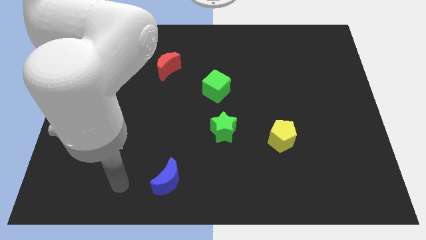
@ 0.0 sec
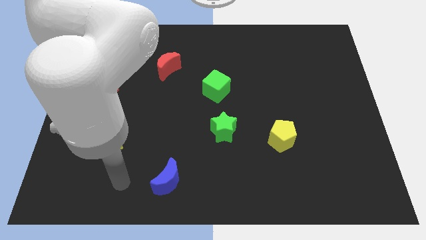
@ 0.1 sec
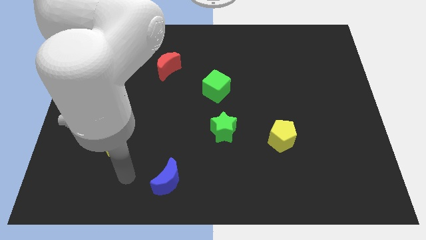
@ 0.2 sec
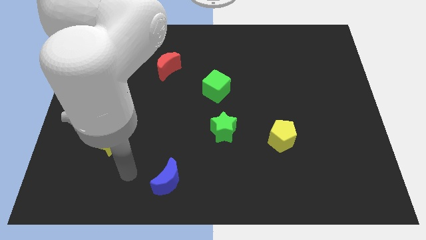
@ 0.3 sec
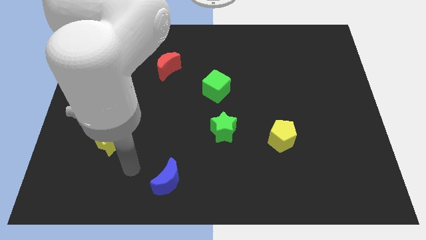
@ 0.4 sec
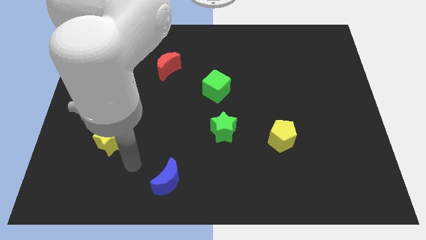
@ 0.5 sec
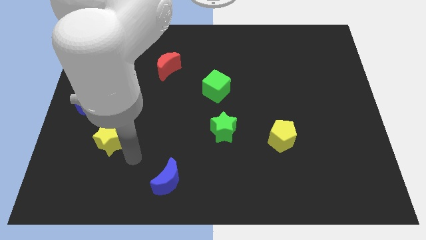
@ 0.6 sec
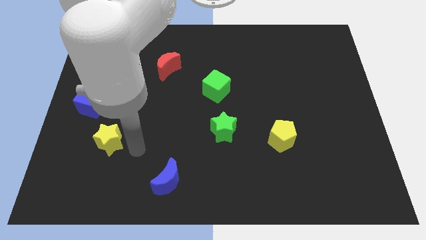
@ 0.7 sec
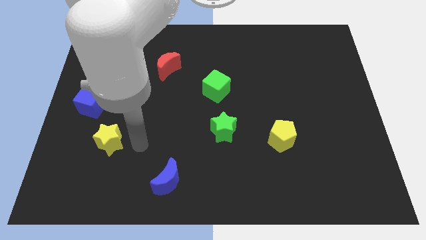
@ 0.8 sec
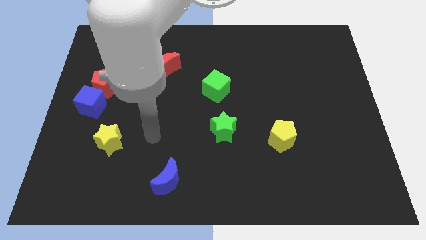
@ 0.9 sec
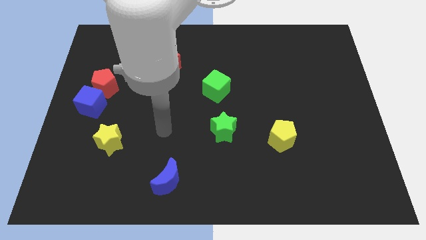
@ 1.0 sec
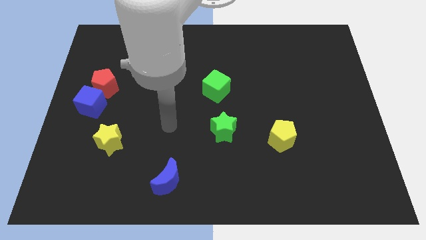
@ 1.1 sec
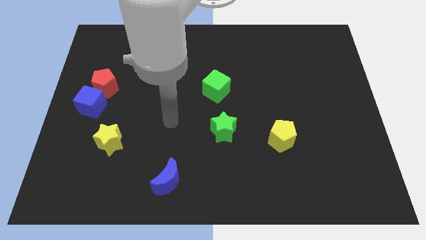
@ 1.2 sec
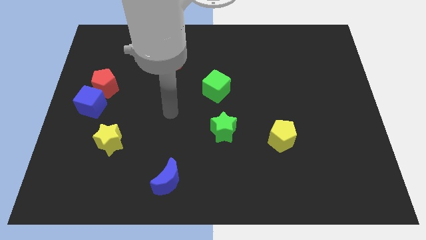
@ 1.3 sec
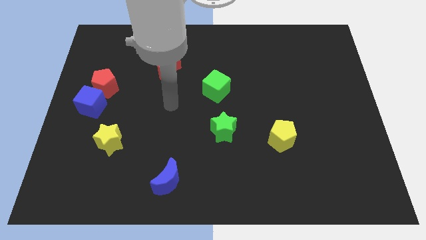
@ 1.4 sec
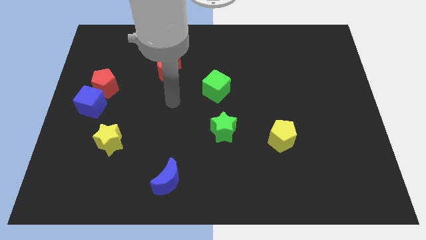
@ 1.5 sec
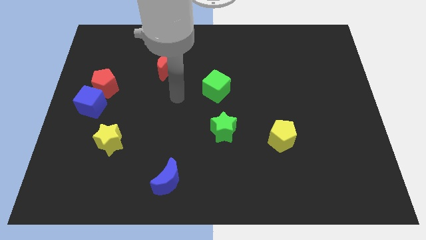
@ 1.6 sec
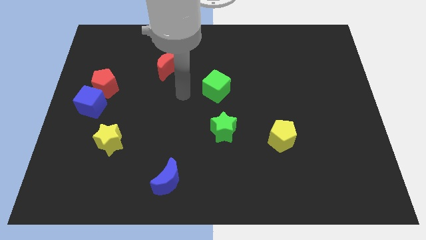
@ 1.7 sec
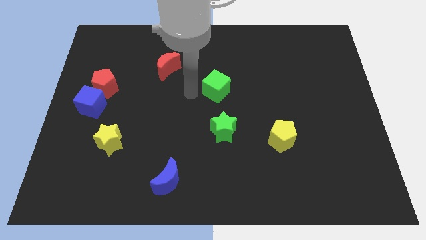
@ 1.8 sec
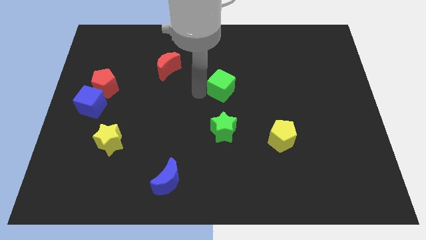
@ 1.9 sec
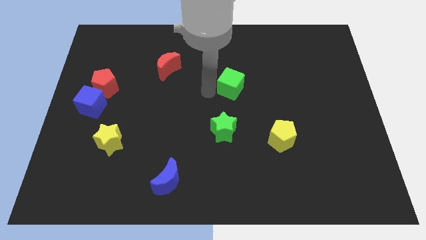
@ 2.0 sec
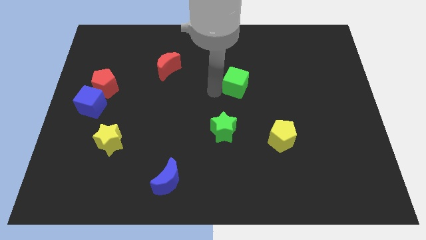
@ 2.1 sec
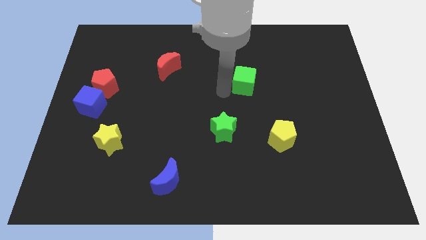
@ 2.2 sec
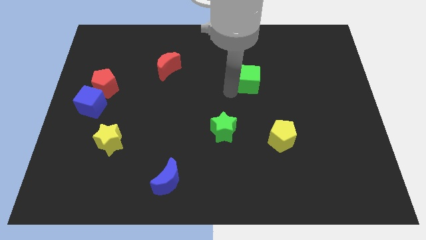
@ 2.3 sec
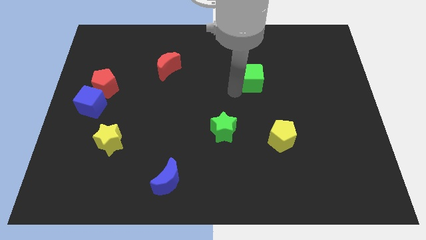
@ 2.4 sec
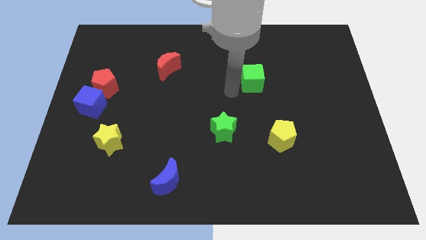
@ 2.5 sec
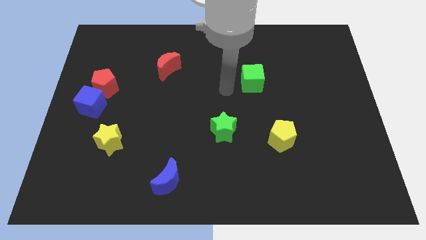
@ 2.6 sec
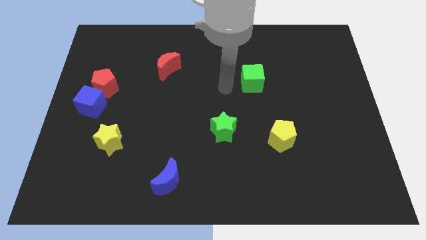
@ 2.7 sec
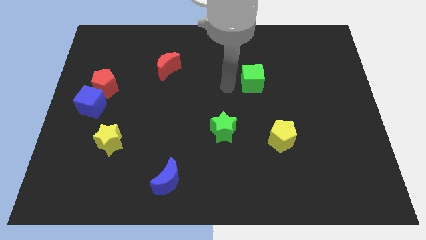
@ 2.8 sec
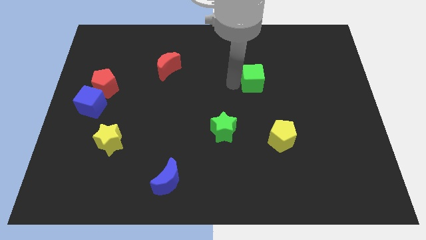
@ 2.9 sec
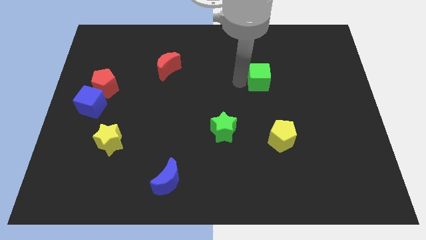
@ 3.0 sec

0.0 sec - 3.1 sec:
push the green cube to the top right of the green star

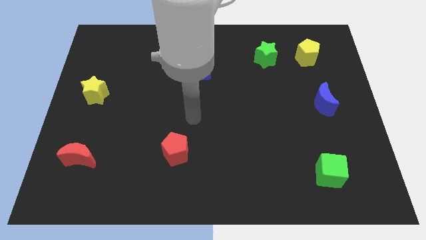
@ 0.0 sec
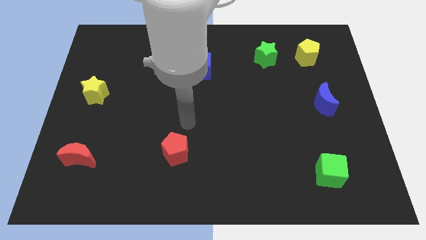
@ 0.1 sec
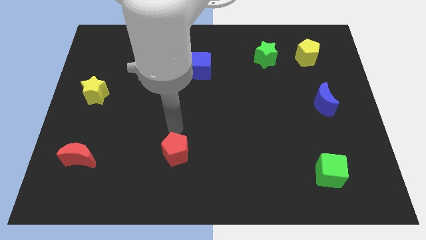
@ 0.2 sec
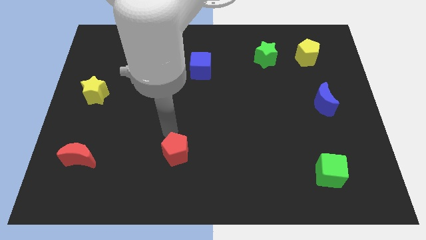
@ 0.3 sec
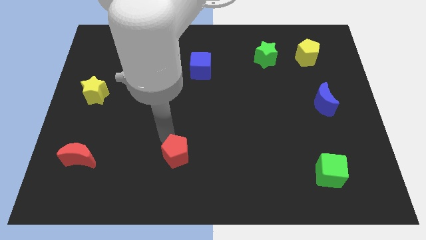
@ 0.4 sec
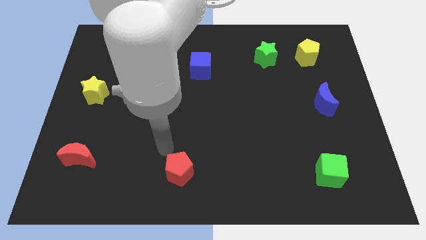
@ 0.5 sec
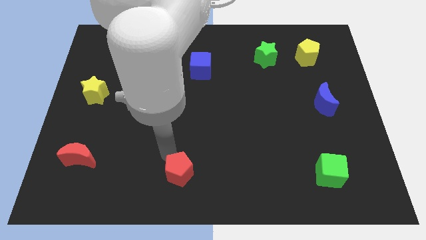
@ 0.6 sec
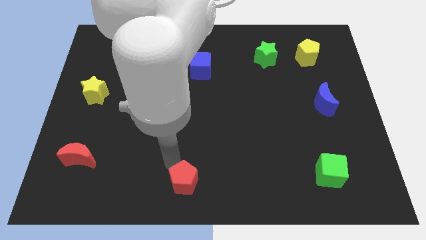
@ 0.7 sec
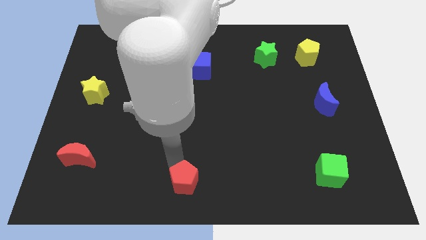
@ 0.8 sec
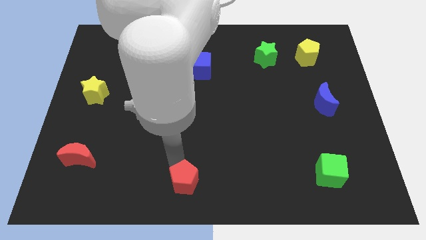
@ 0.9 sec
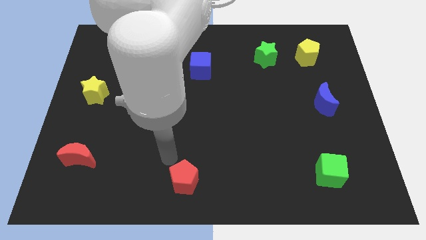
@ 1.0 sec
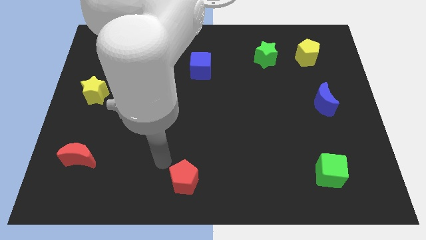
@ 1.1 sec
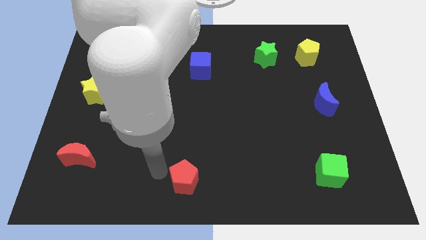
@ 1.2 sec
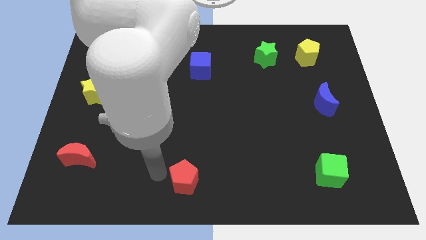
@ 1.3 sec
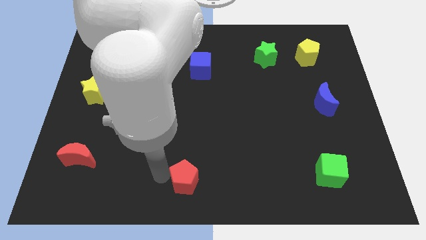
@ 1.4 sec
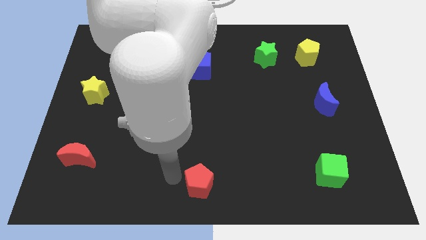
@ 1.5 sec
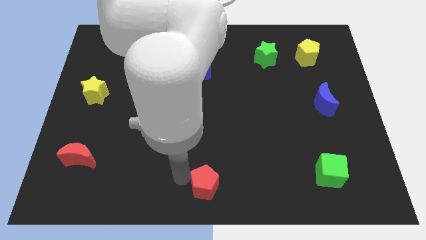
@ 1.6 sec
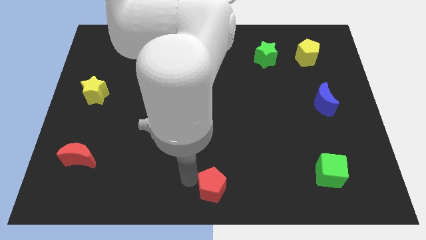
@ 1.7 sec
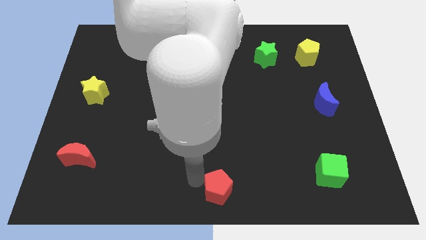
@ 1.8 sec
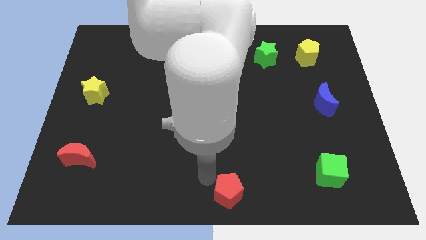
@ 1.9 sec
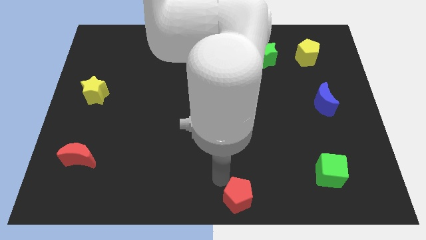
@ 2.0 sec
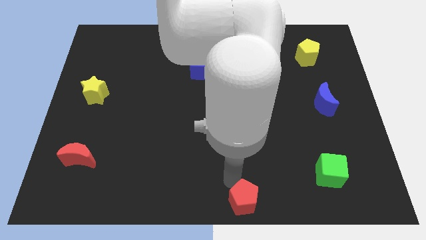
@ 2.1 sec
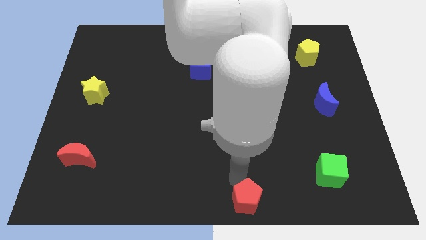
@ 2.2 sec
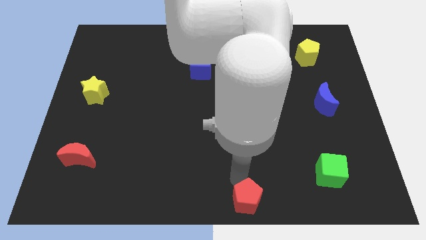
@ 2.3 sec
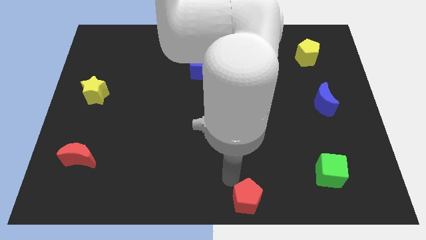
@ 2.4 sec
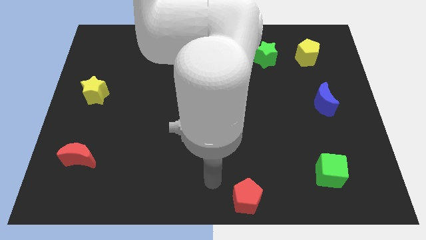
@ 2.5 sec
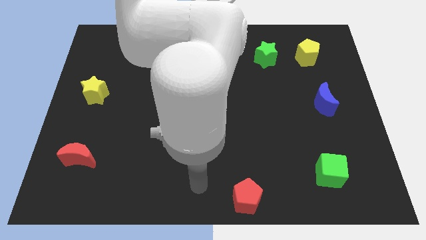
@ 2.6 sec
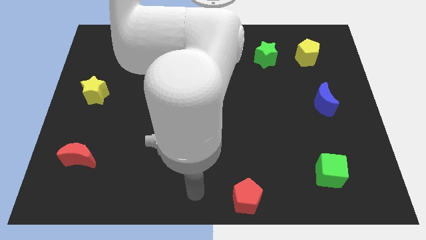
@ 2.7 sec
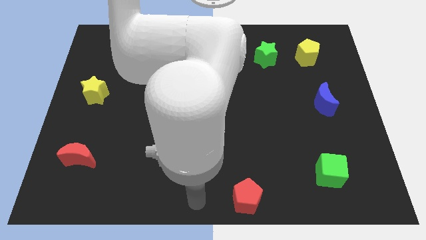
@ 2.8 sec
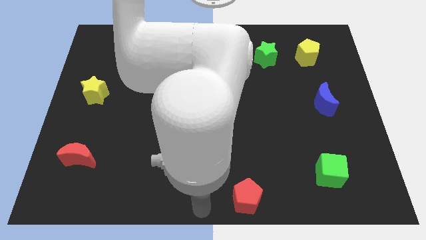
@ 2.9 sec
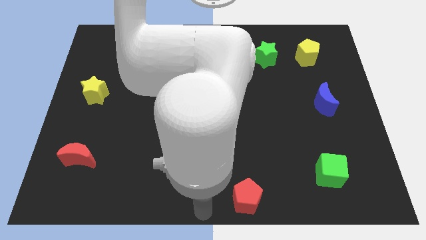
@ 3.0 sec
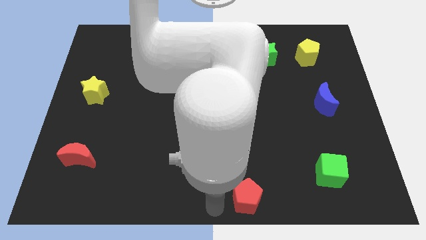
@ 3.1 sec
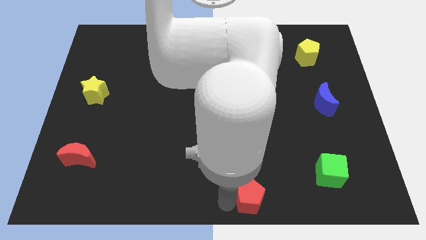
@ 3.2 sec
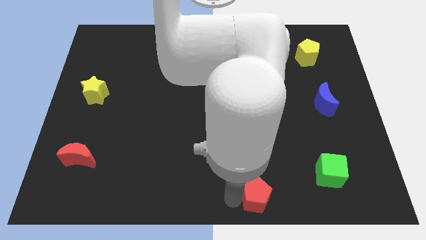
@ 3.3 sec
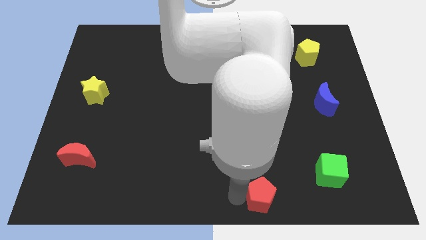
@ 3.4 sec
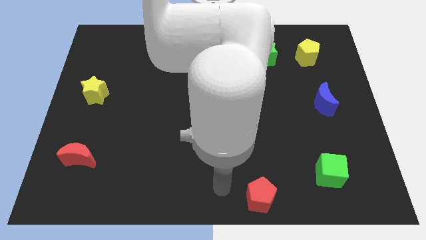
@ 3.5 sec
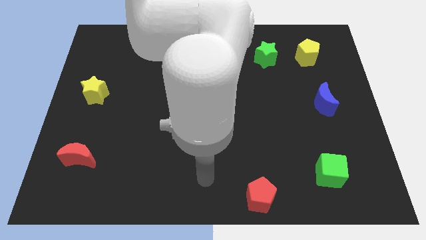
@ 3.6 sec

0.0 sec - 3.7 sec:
drag the red pentagon diagonally bottom right to the blue cube

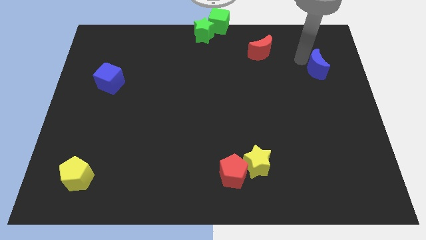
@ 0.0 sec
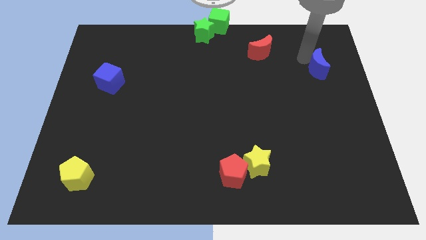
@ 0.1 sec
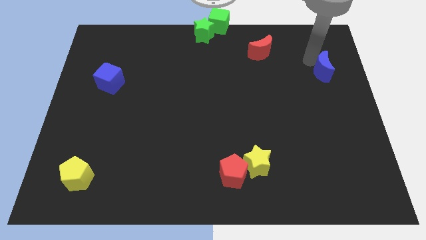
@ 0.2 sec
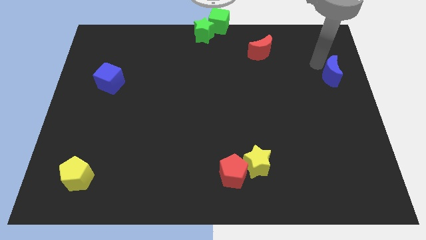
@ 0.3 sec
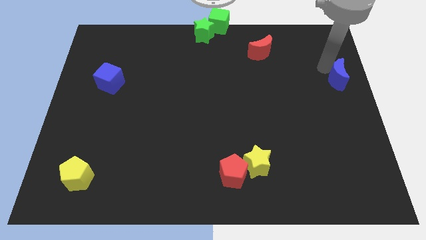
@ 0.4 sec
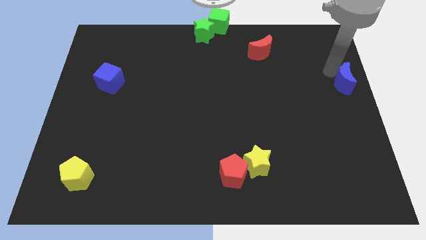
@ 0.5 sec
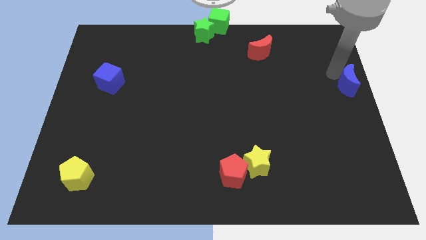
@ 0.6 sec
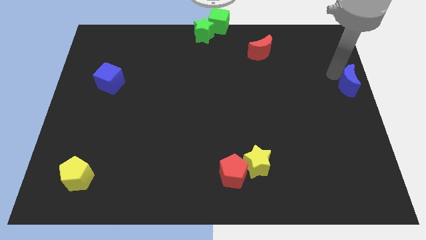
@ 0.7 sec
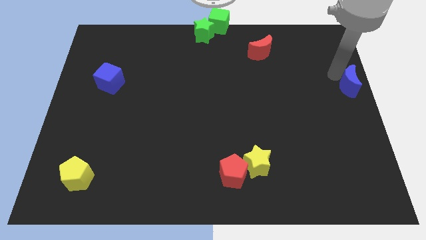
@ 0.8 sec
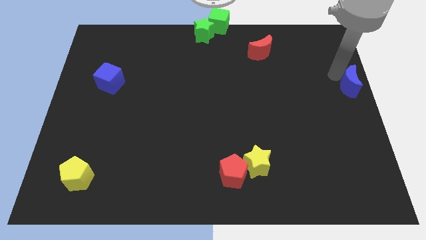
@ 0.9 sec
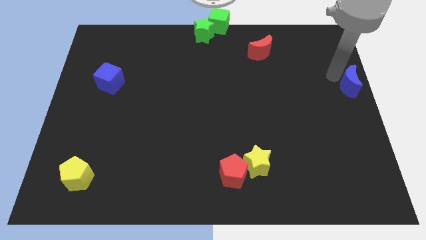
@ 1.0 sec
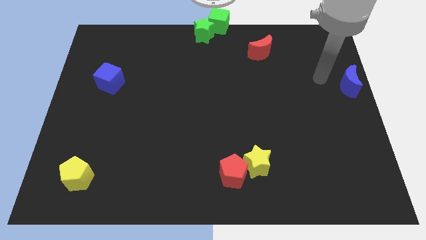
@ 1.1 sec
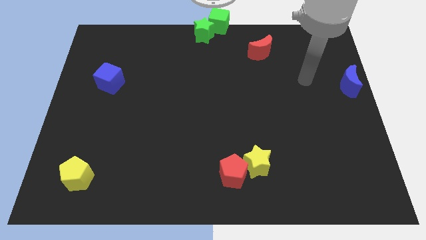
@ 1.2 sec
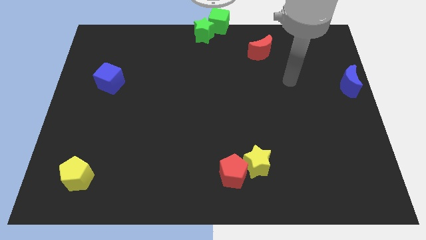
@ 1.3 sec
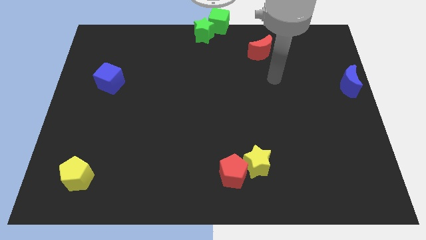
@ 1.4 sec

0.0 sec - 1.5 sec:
place blue moon at the center right of the board

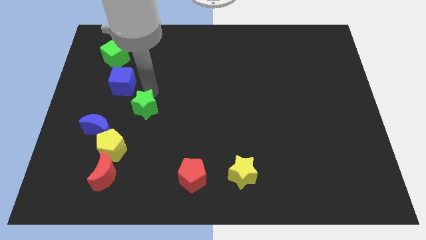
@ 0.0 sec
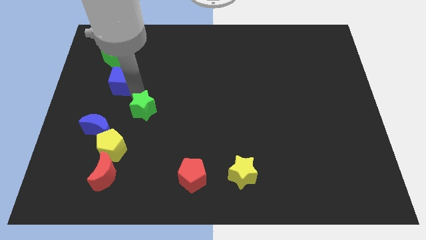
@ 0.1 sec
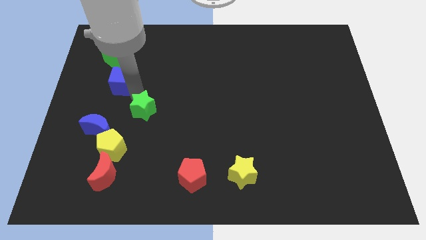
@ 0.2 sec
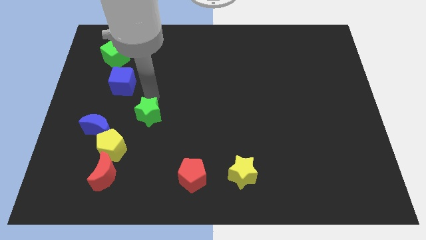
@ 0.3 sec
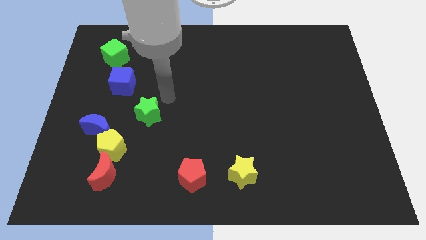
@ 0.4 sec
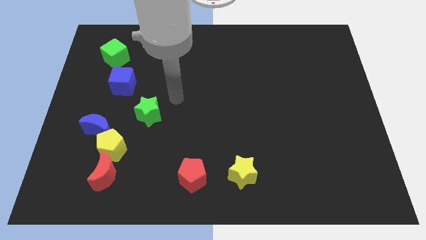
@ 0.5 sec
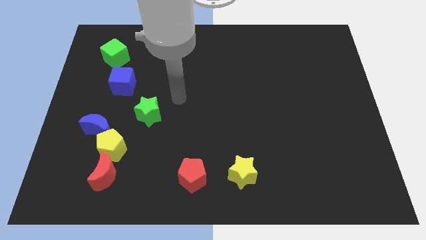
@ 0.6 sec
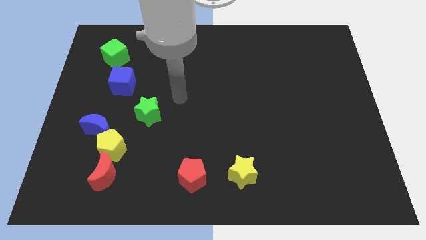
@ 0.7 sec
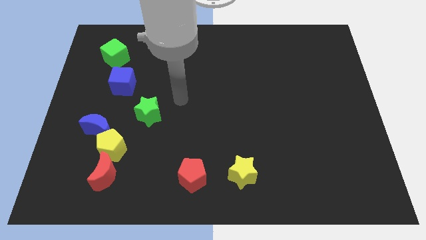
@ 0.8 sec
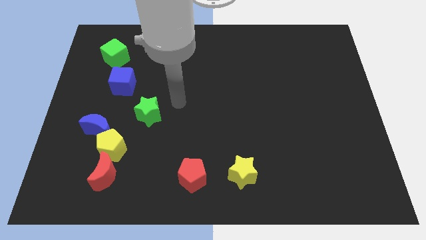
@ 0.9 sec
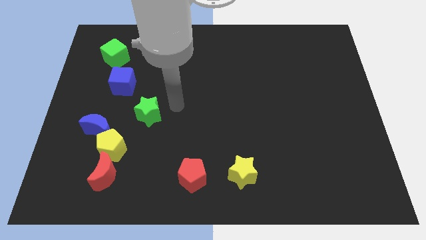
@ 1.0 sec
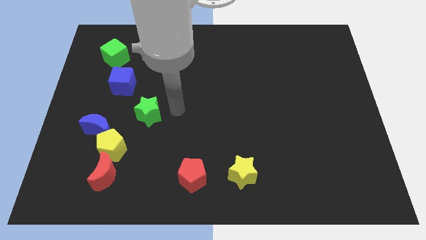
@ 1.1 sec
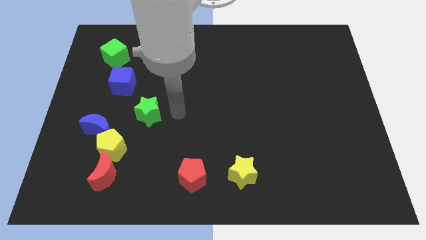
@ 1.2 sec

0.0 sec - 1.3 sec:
move the green star diagonally to the bottom right of the blue cube
